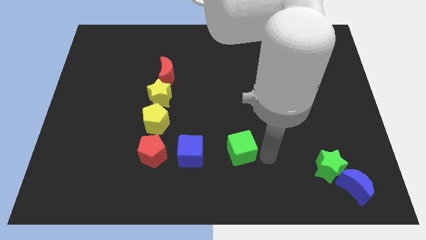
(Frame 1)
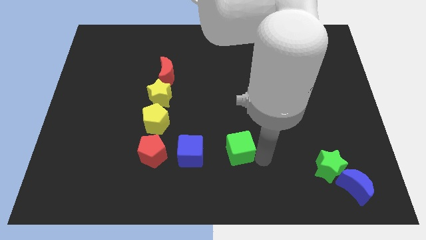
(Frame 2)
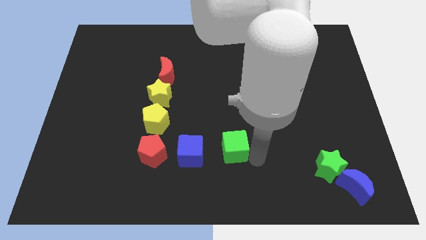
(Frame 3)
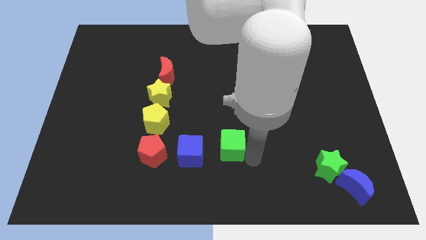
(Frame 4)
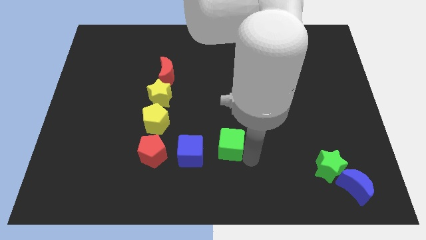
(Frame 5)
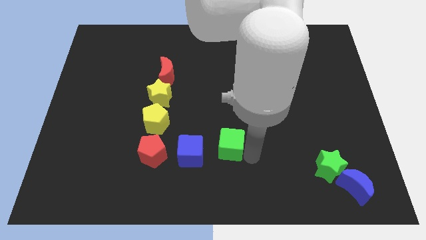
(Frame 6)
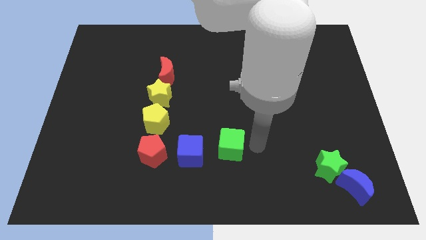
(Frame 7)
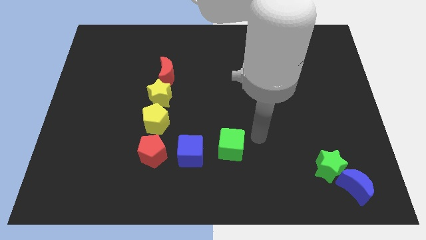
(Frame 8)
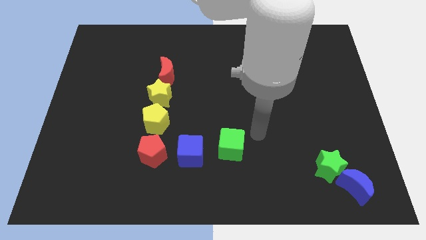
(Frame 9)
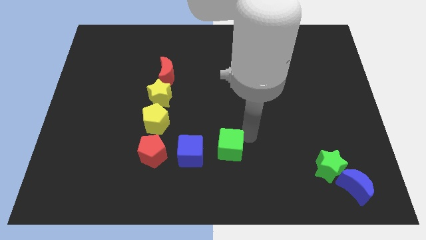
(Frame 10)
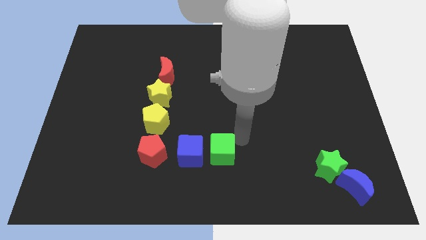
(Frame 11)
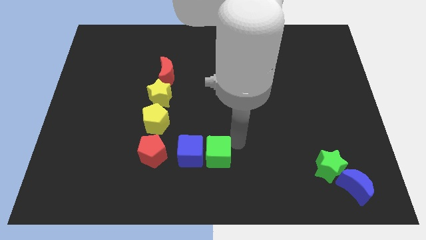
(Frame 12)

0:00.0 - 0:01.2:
push the green cube parallel right to the blue cube

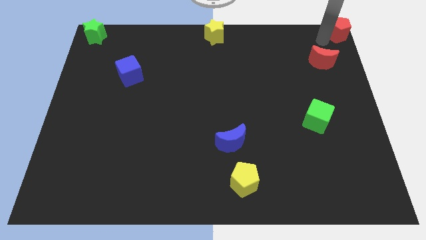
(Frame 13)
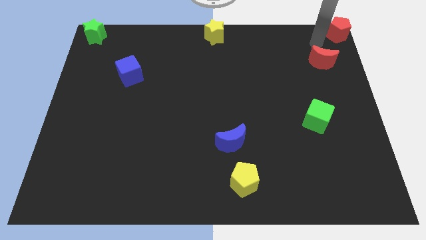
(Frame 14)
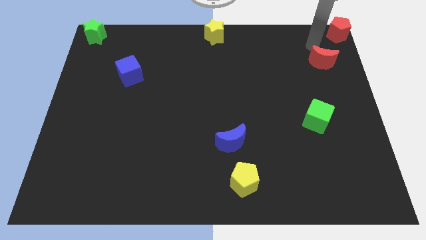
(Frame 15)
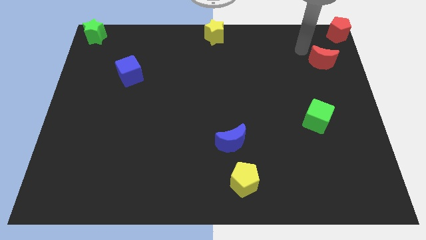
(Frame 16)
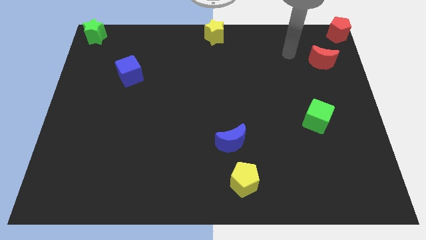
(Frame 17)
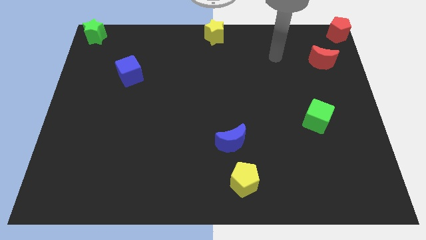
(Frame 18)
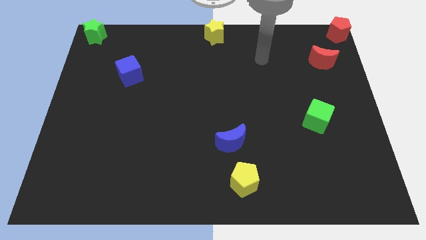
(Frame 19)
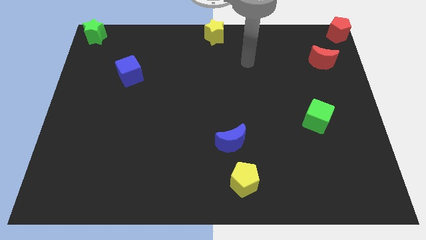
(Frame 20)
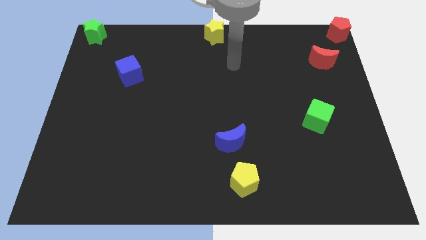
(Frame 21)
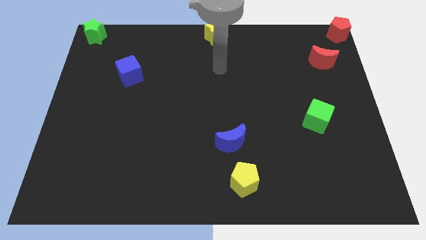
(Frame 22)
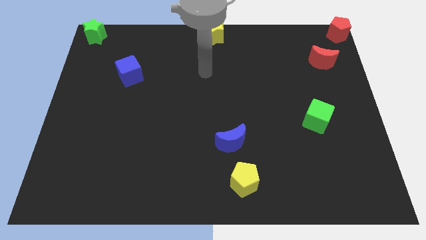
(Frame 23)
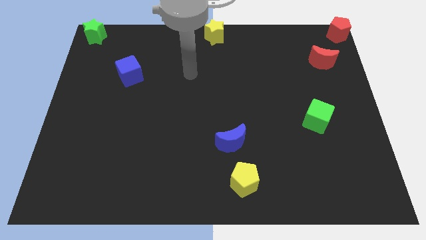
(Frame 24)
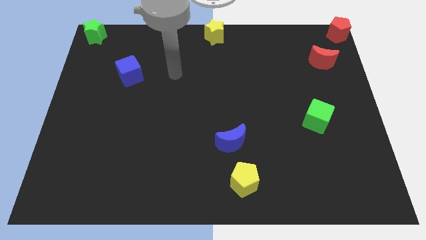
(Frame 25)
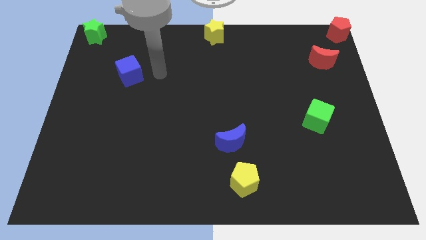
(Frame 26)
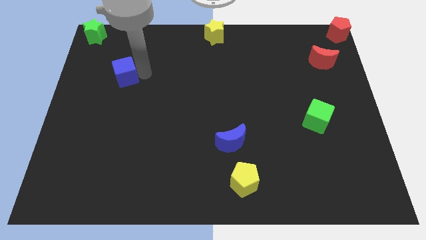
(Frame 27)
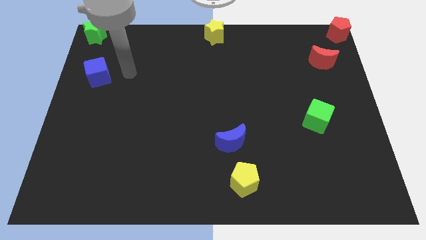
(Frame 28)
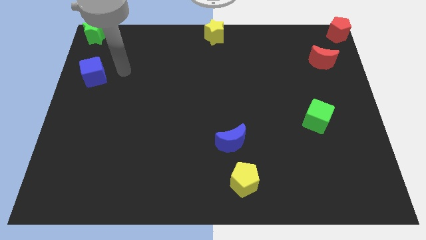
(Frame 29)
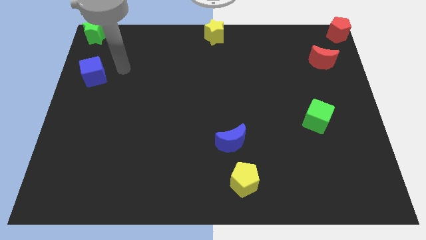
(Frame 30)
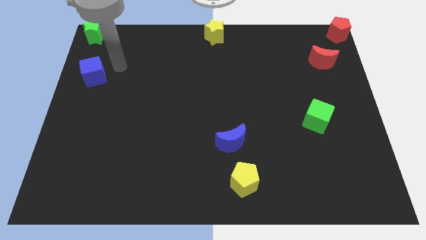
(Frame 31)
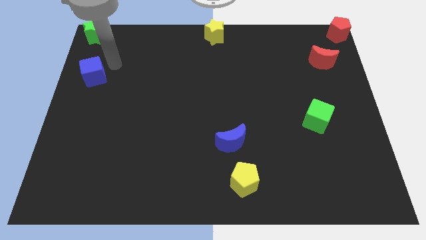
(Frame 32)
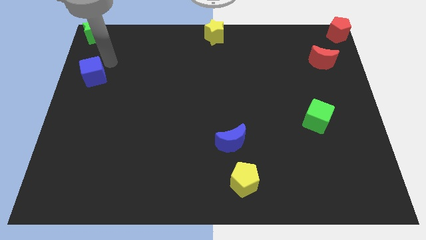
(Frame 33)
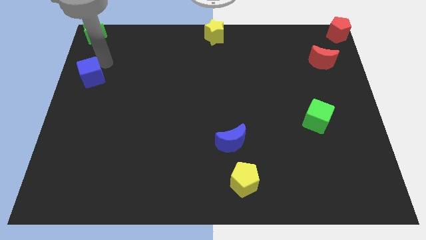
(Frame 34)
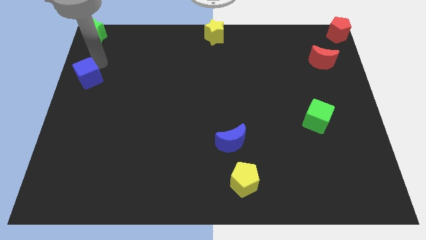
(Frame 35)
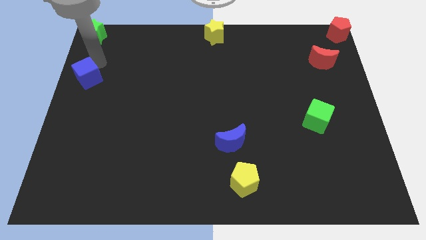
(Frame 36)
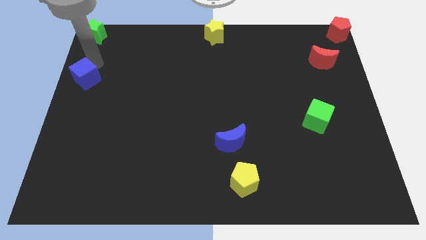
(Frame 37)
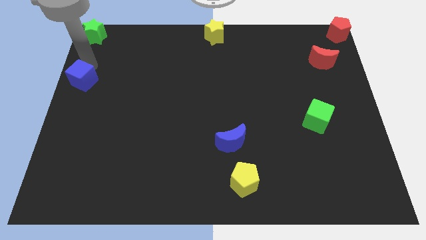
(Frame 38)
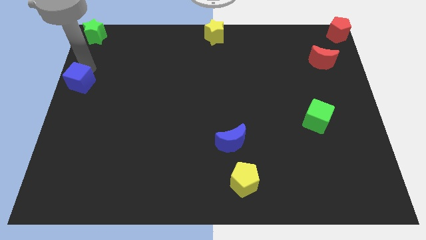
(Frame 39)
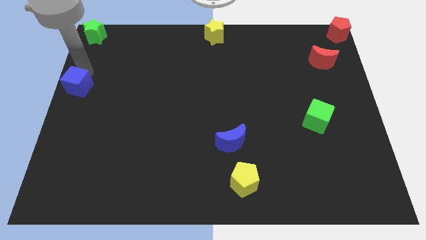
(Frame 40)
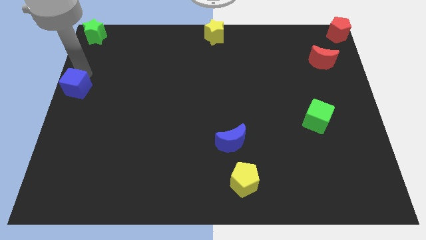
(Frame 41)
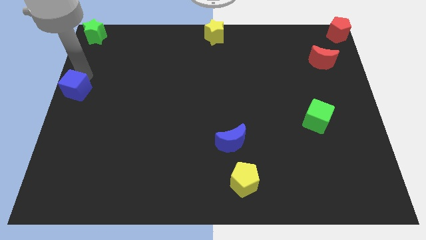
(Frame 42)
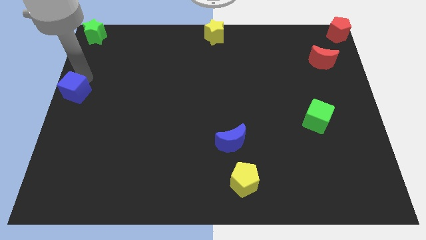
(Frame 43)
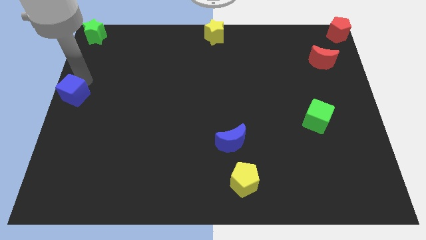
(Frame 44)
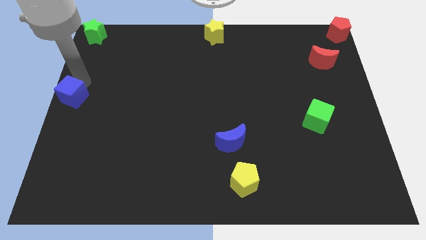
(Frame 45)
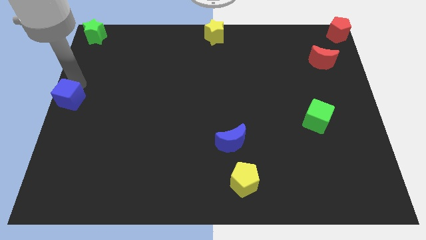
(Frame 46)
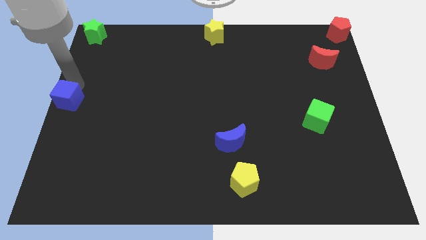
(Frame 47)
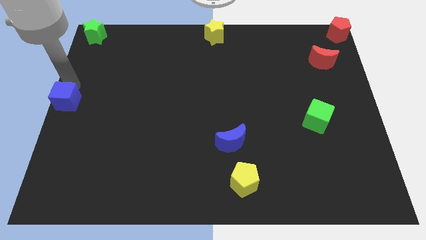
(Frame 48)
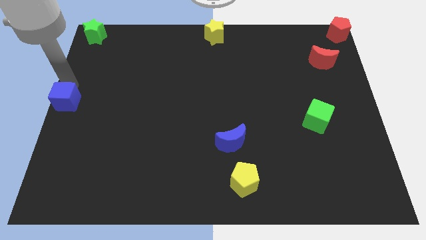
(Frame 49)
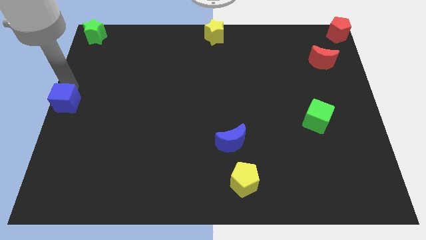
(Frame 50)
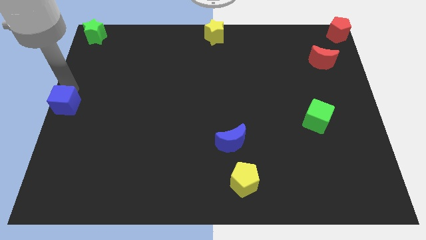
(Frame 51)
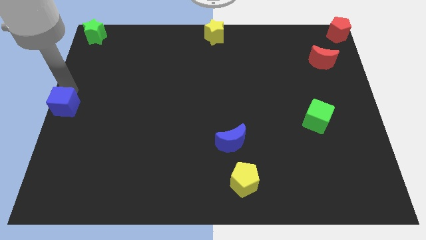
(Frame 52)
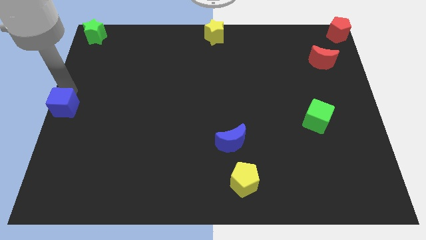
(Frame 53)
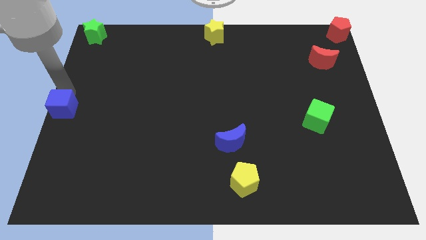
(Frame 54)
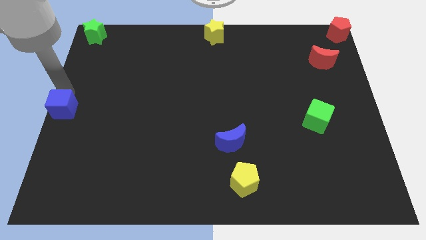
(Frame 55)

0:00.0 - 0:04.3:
slide the blue cube to the center left of the table

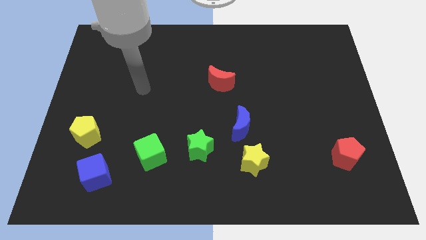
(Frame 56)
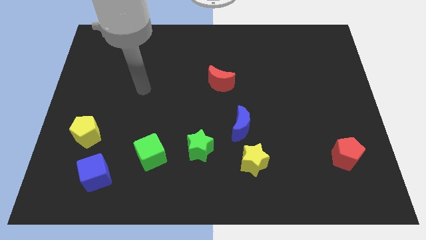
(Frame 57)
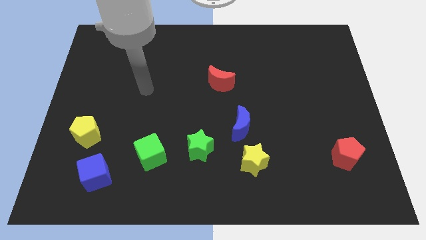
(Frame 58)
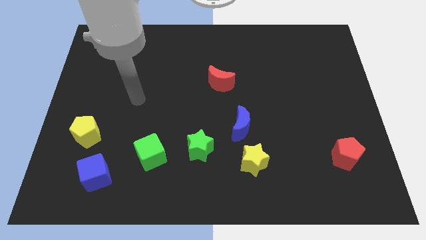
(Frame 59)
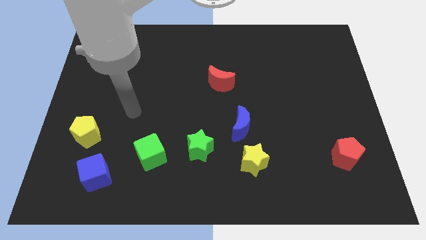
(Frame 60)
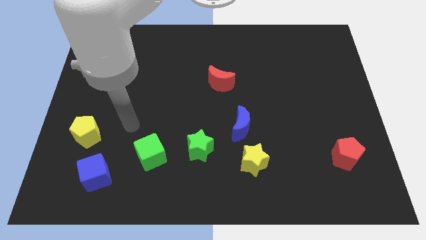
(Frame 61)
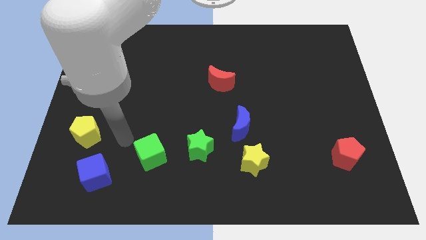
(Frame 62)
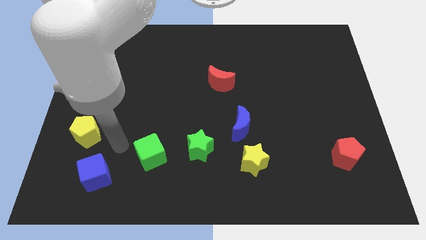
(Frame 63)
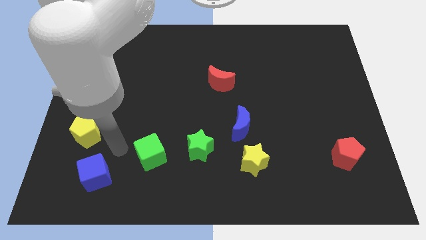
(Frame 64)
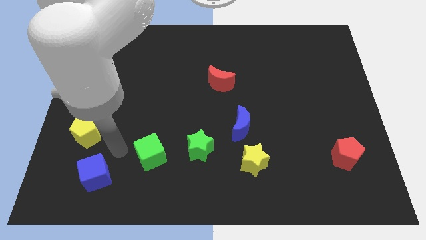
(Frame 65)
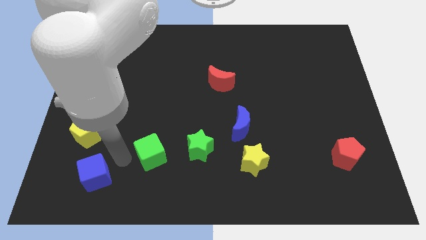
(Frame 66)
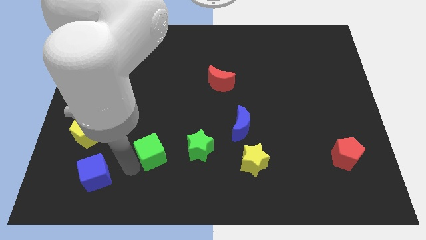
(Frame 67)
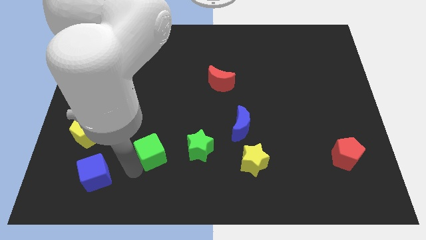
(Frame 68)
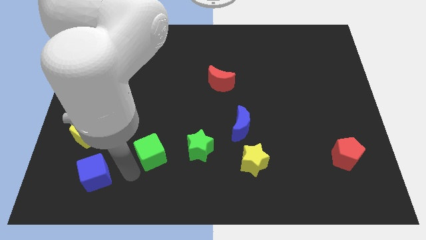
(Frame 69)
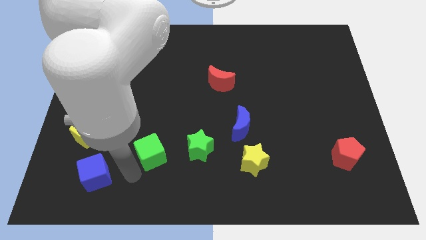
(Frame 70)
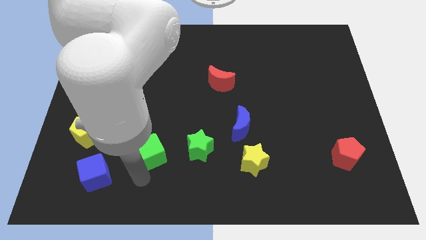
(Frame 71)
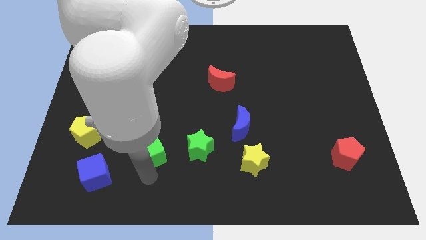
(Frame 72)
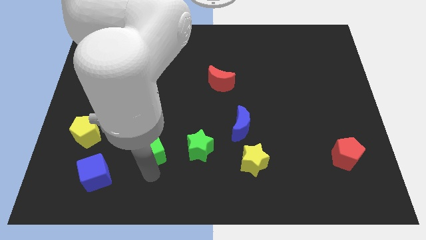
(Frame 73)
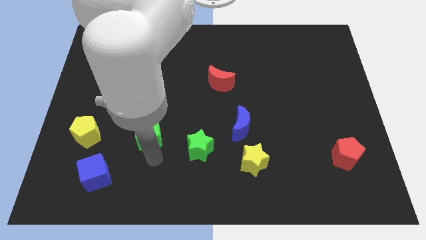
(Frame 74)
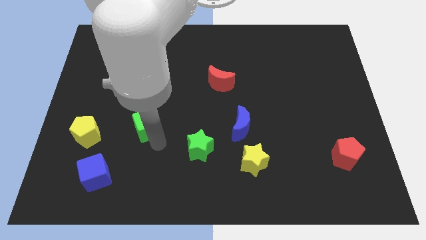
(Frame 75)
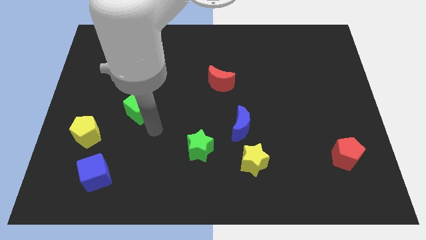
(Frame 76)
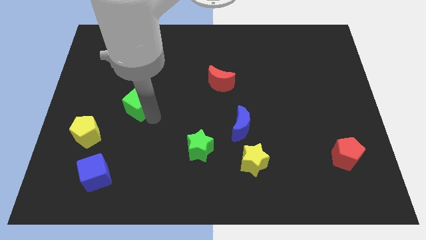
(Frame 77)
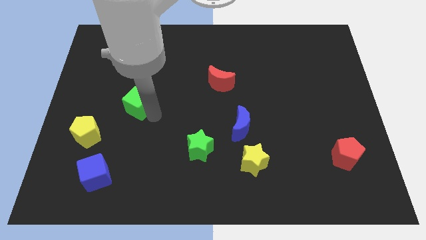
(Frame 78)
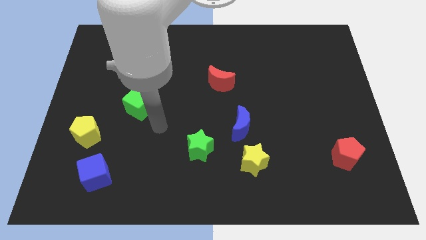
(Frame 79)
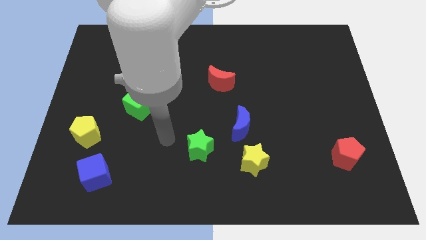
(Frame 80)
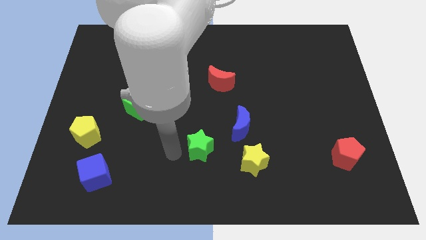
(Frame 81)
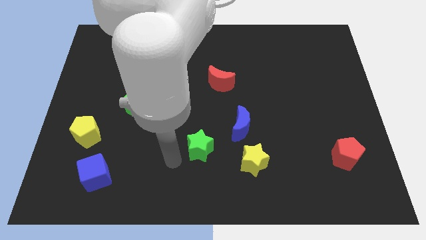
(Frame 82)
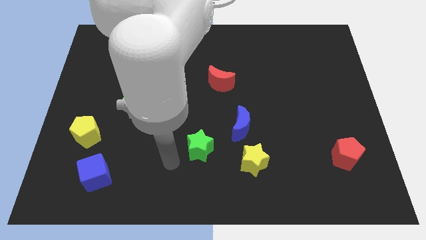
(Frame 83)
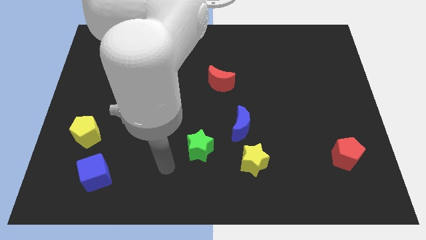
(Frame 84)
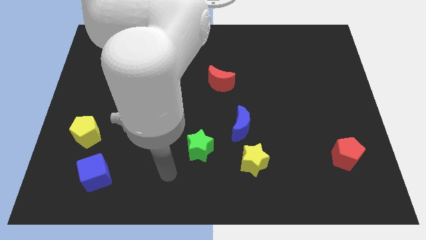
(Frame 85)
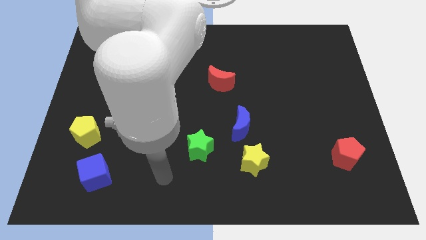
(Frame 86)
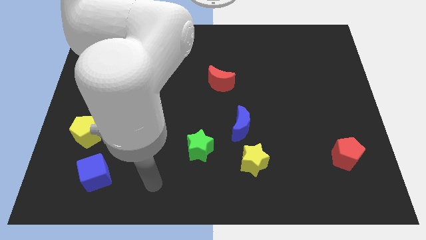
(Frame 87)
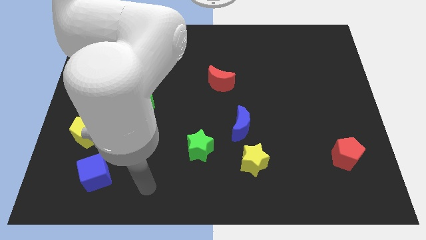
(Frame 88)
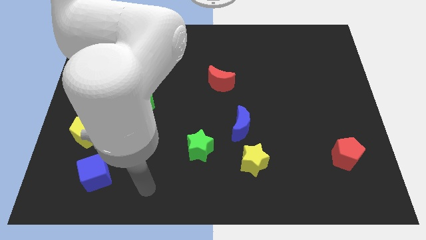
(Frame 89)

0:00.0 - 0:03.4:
move the green cube to the top of the board
